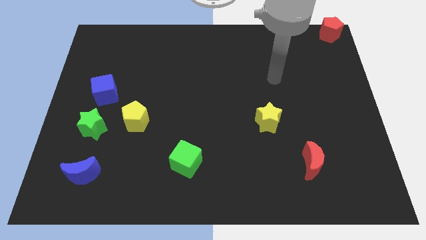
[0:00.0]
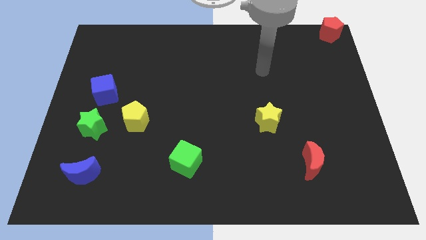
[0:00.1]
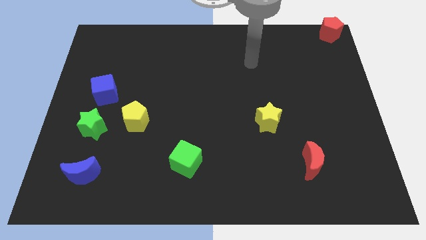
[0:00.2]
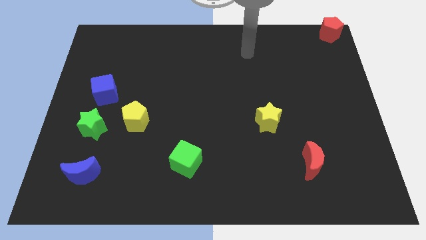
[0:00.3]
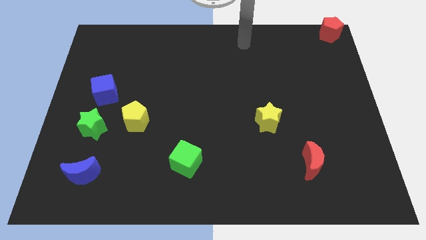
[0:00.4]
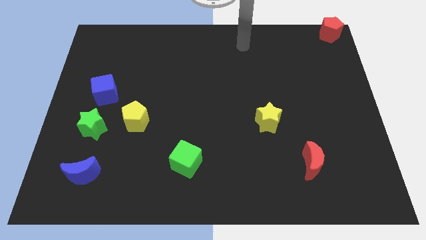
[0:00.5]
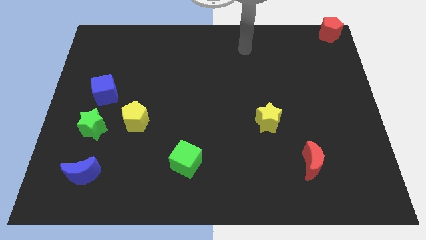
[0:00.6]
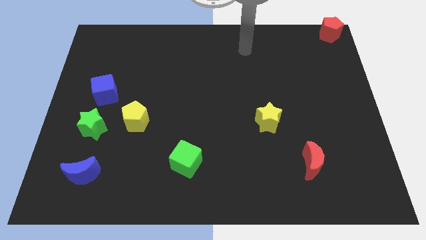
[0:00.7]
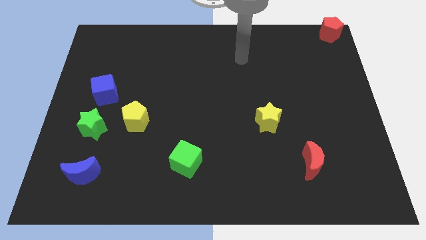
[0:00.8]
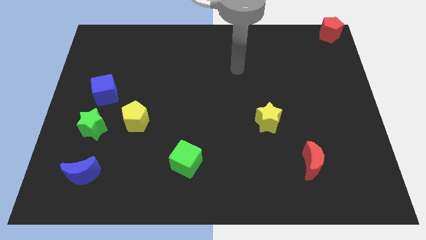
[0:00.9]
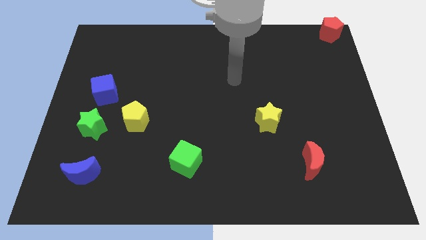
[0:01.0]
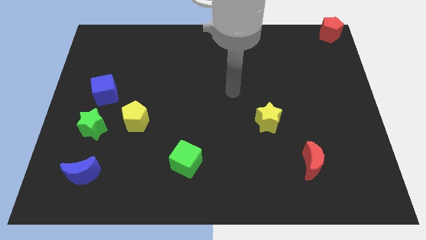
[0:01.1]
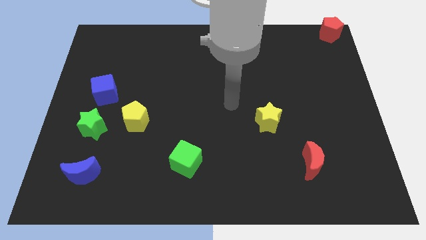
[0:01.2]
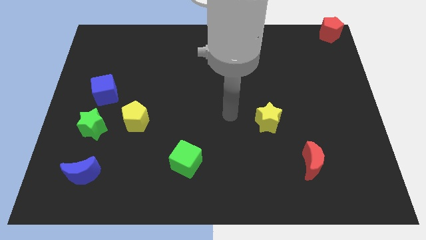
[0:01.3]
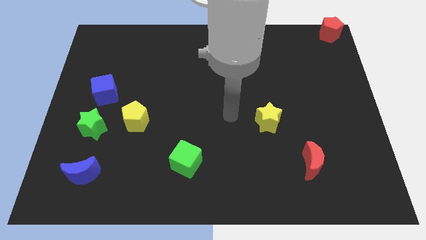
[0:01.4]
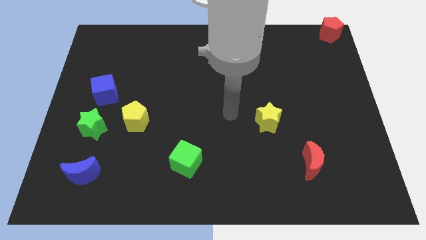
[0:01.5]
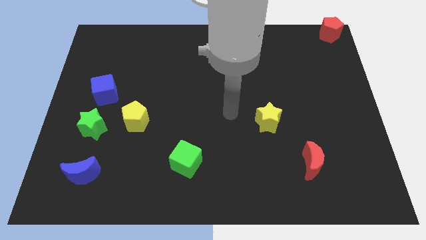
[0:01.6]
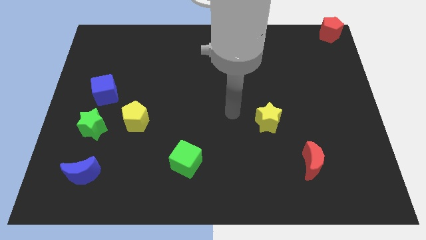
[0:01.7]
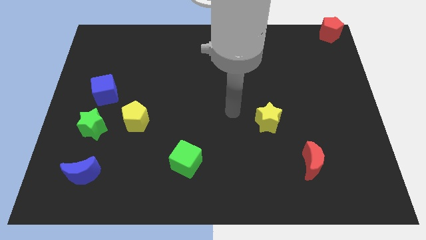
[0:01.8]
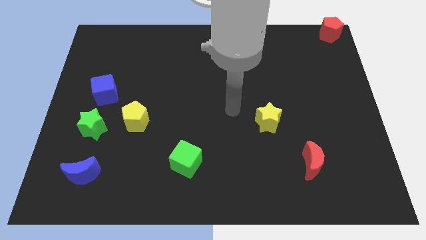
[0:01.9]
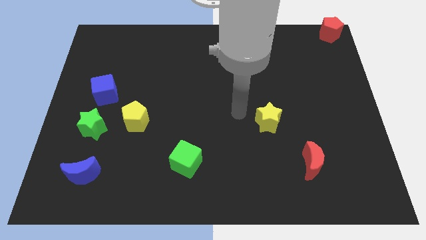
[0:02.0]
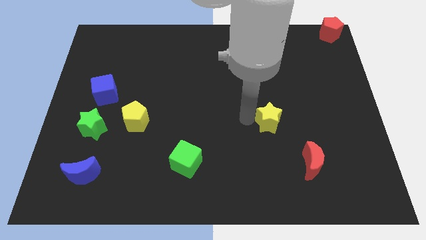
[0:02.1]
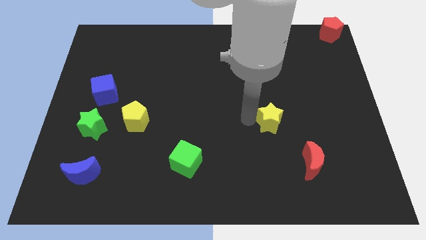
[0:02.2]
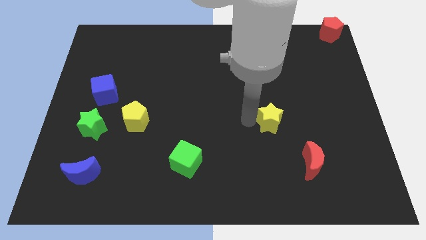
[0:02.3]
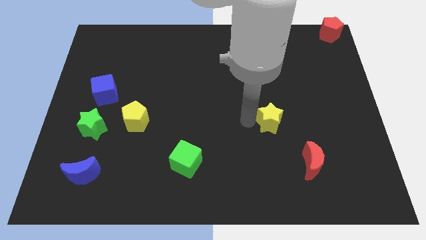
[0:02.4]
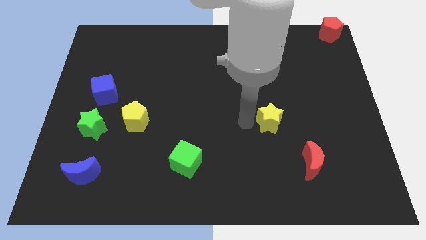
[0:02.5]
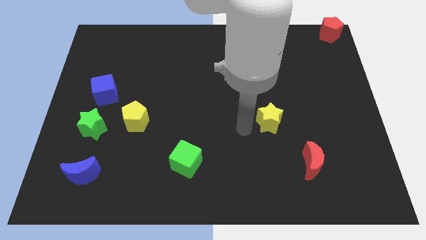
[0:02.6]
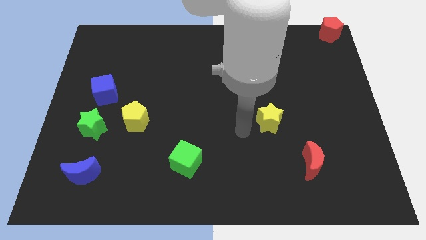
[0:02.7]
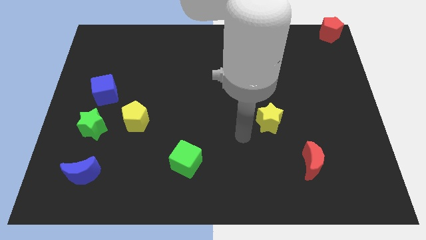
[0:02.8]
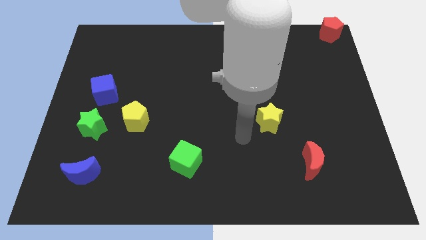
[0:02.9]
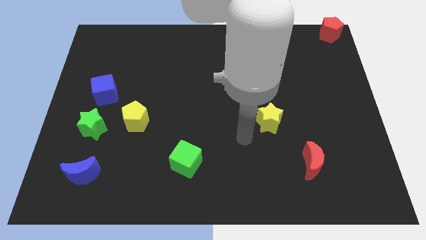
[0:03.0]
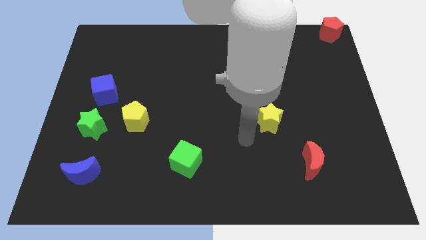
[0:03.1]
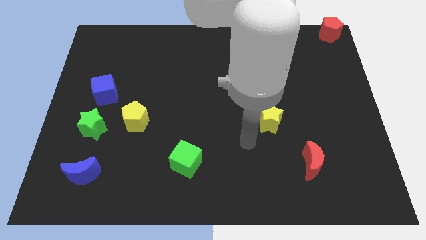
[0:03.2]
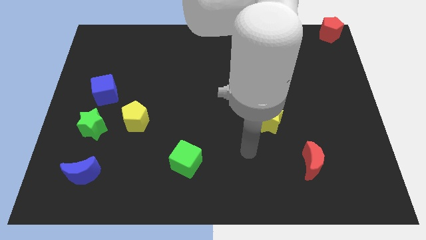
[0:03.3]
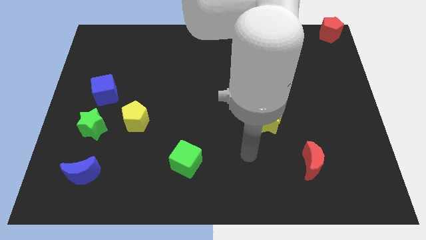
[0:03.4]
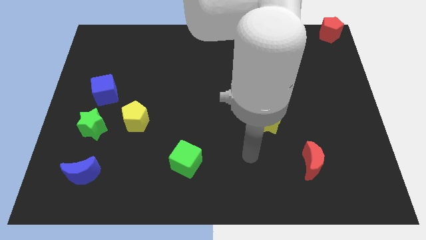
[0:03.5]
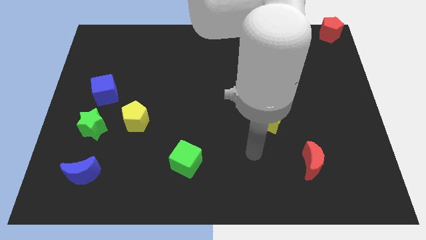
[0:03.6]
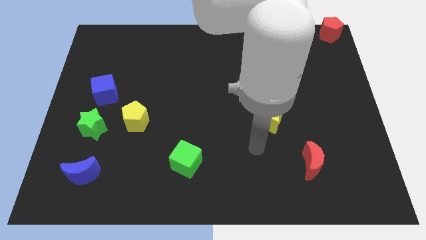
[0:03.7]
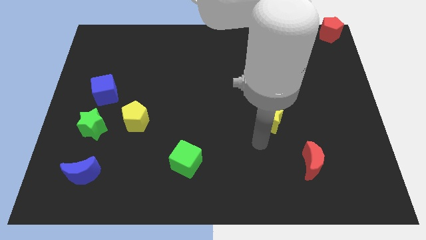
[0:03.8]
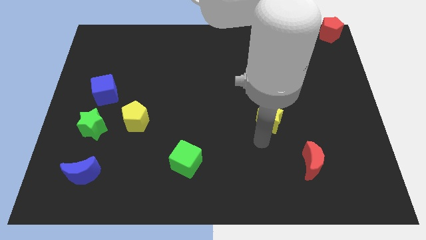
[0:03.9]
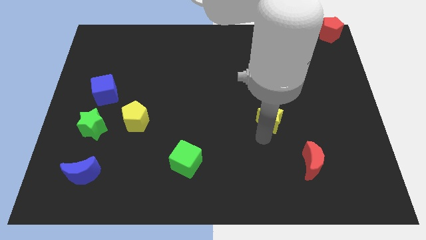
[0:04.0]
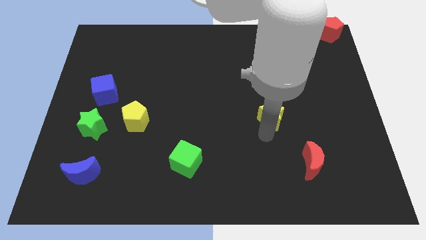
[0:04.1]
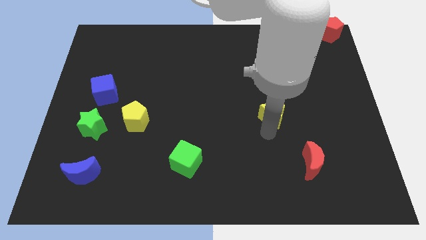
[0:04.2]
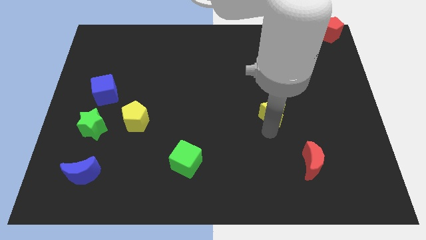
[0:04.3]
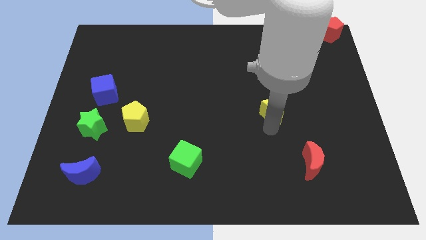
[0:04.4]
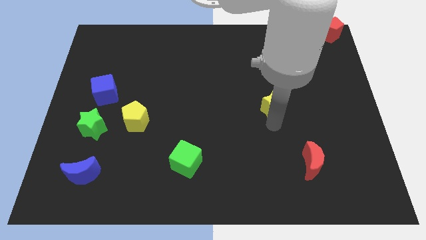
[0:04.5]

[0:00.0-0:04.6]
place the yellow star diagonal to the red moon

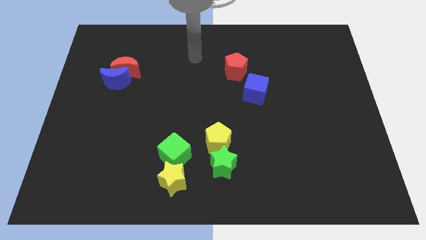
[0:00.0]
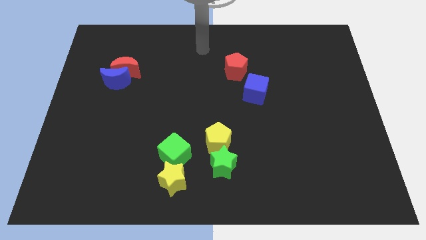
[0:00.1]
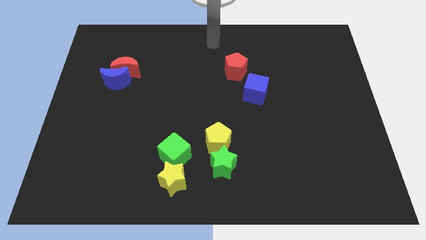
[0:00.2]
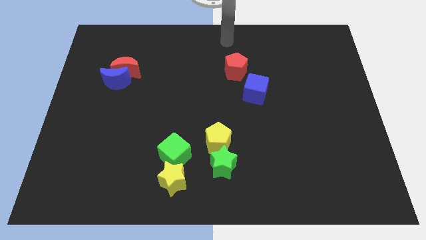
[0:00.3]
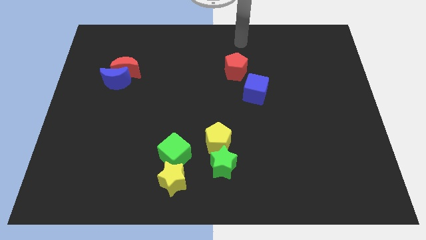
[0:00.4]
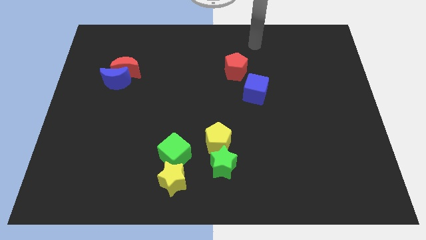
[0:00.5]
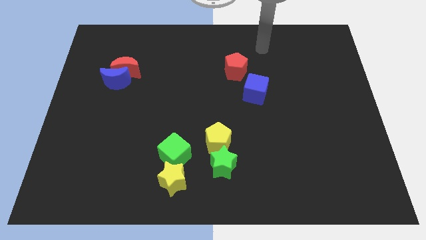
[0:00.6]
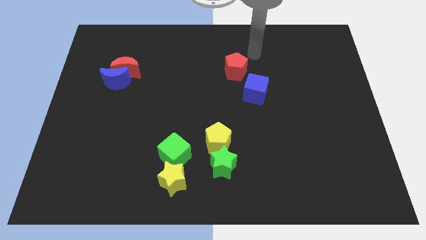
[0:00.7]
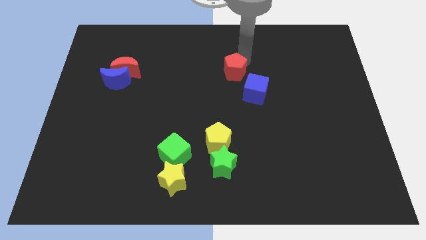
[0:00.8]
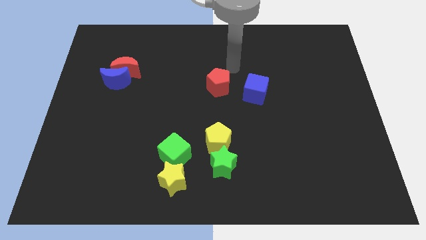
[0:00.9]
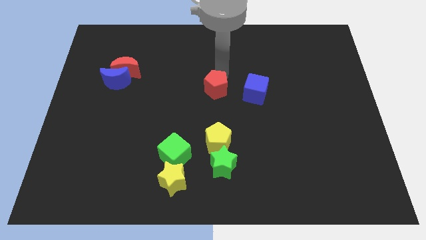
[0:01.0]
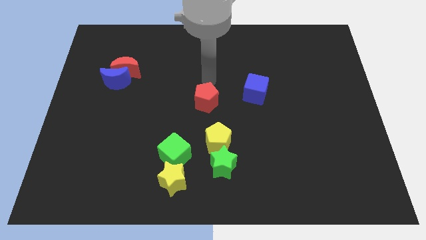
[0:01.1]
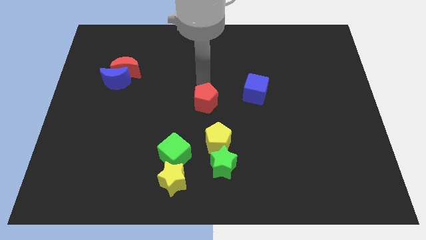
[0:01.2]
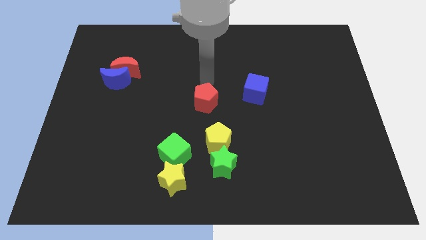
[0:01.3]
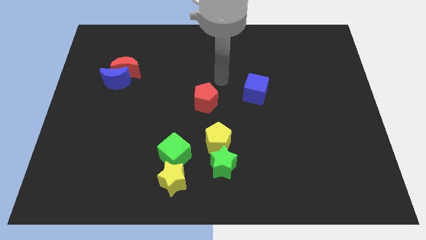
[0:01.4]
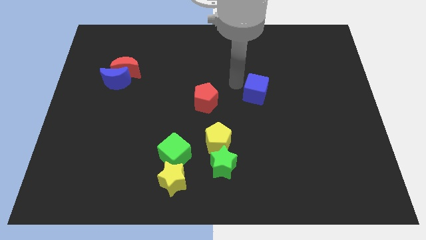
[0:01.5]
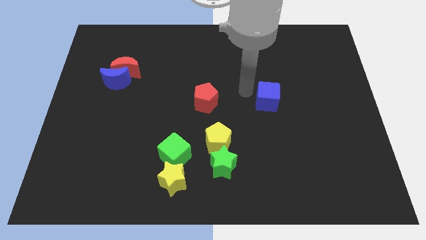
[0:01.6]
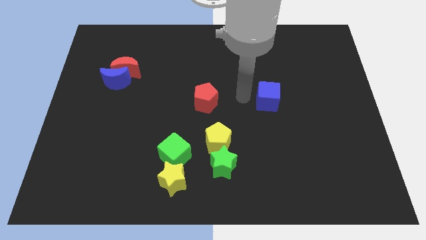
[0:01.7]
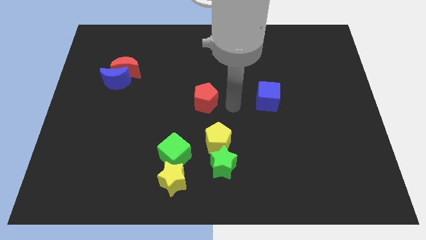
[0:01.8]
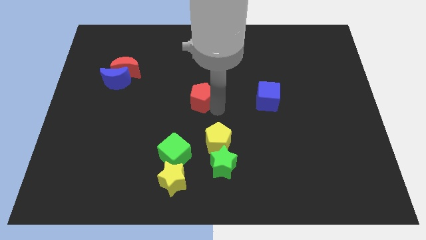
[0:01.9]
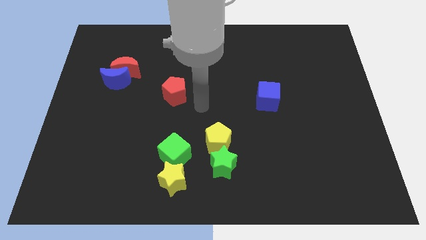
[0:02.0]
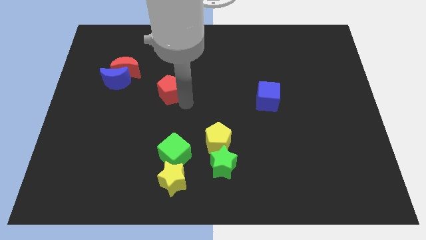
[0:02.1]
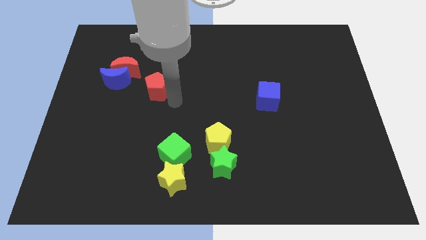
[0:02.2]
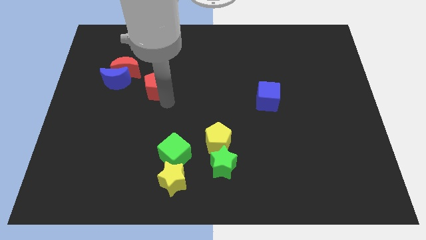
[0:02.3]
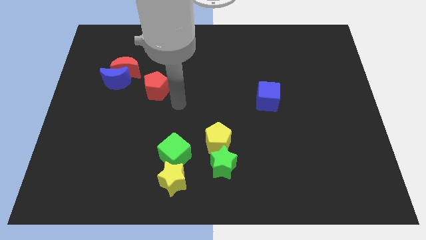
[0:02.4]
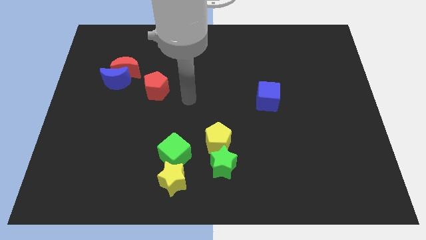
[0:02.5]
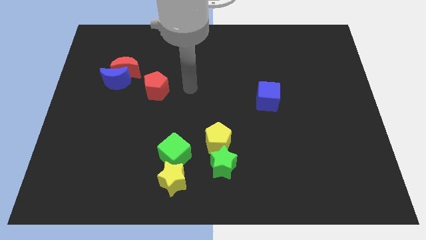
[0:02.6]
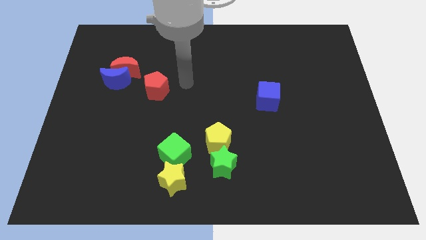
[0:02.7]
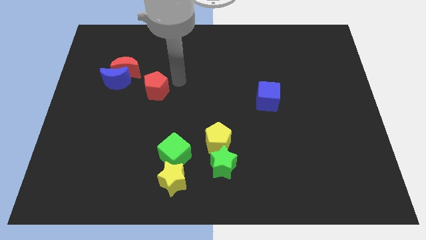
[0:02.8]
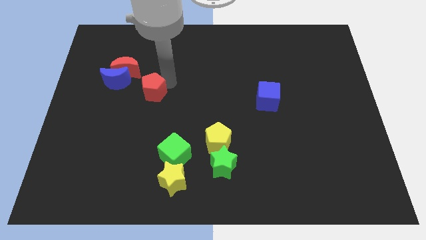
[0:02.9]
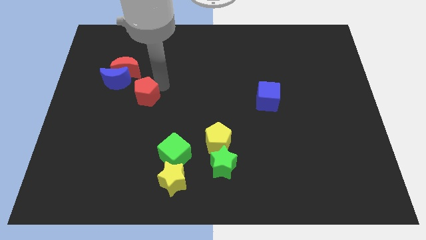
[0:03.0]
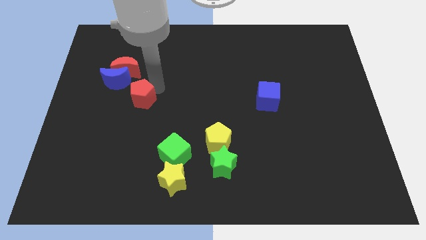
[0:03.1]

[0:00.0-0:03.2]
push the red pentagon towards the blue crescent

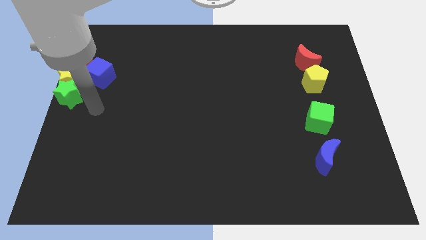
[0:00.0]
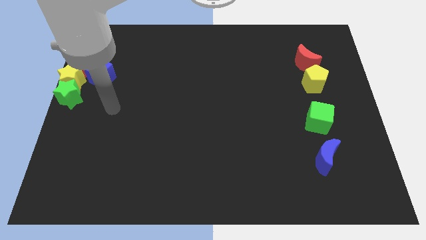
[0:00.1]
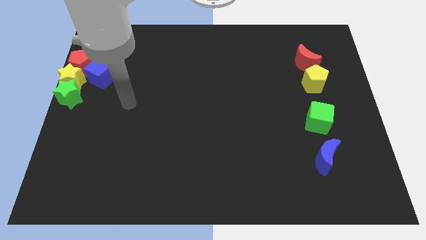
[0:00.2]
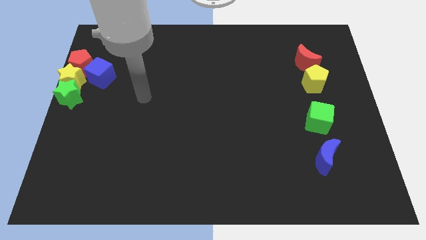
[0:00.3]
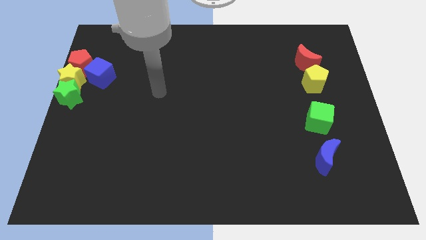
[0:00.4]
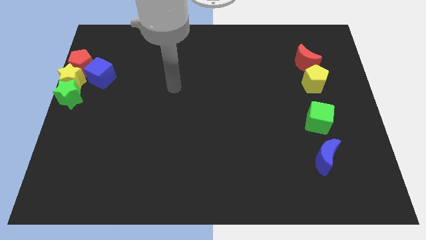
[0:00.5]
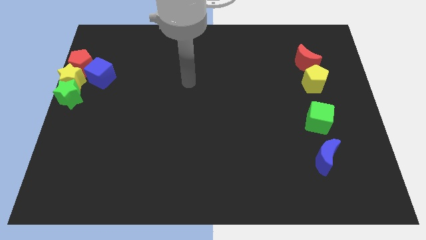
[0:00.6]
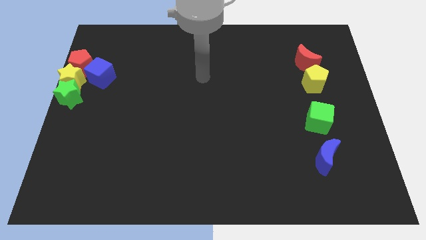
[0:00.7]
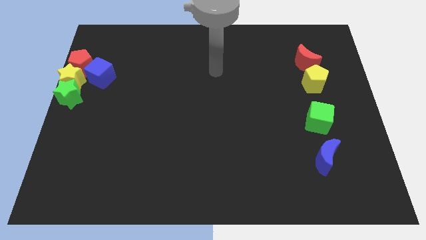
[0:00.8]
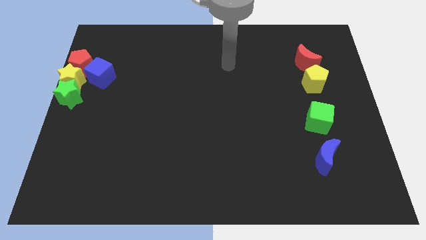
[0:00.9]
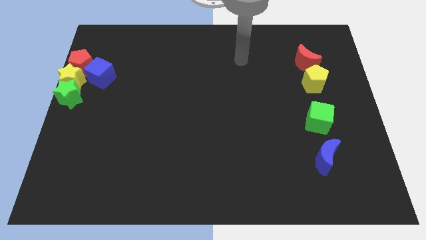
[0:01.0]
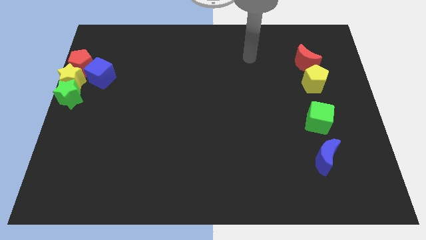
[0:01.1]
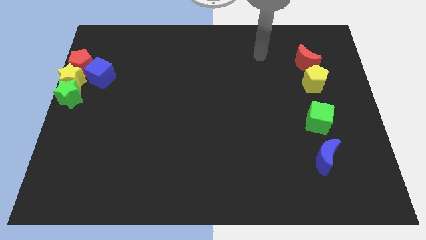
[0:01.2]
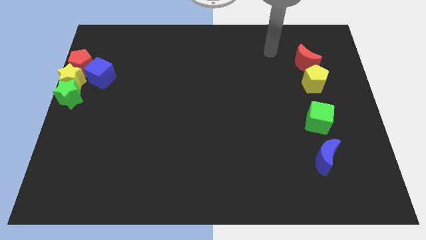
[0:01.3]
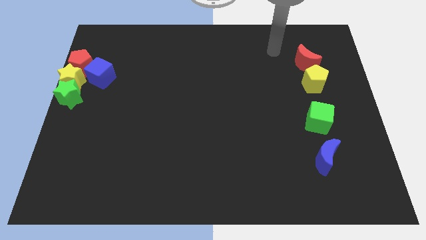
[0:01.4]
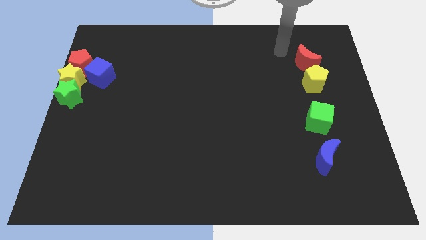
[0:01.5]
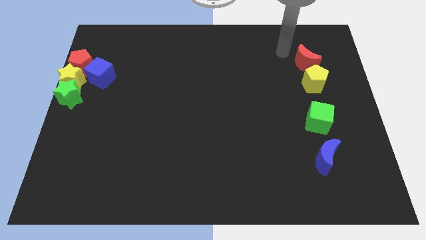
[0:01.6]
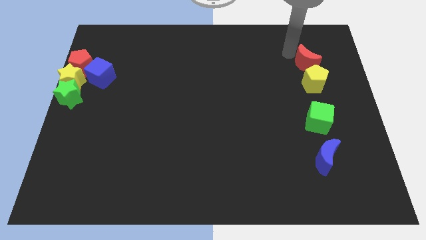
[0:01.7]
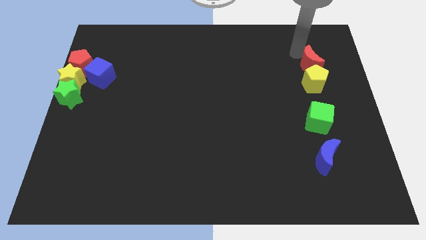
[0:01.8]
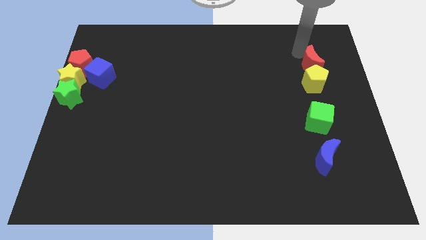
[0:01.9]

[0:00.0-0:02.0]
place the arm above the red moon
